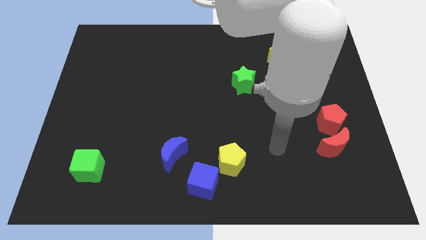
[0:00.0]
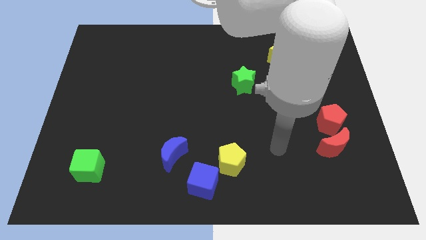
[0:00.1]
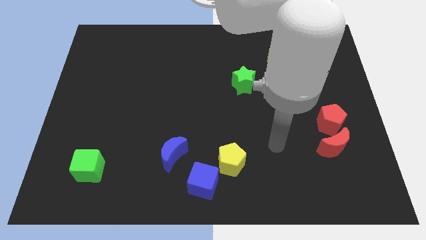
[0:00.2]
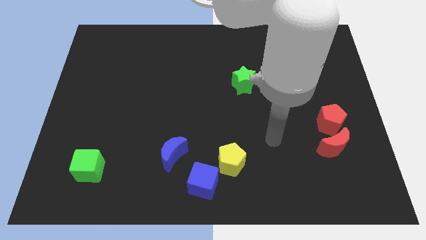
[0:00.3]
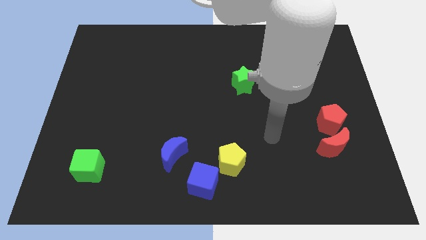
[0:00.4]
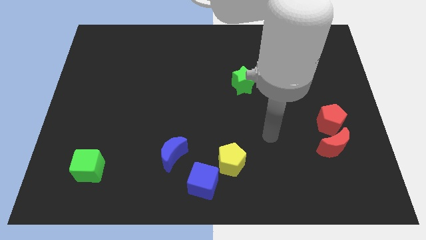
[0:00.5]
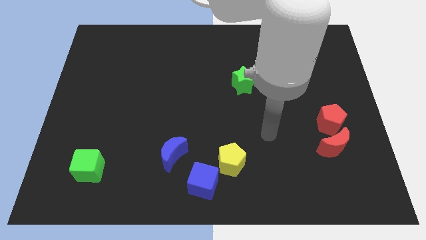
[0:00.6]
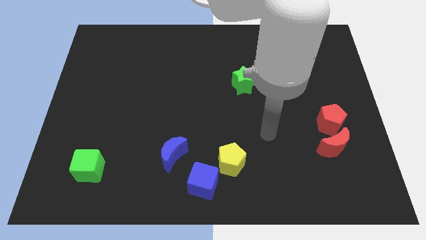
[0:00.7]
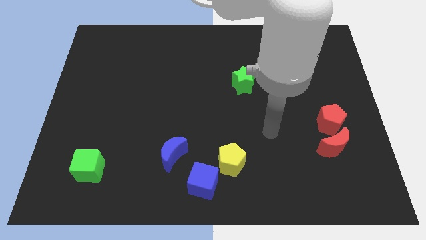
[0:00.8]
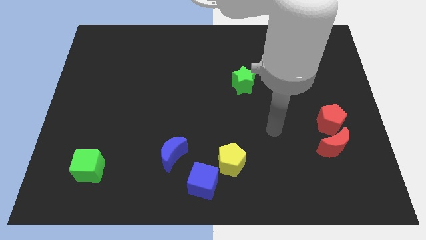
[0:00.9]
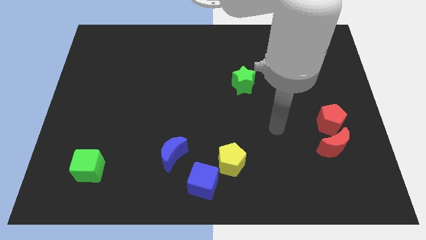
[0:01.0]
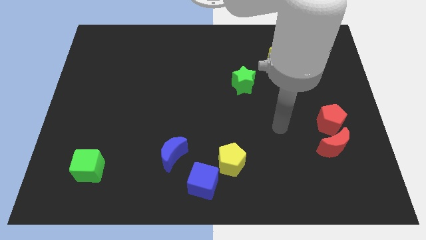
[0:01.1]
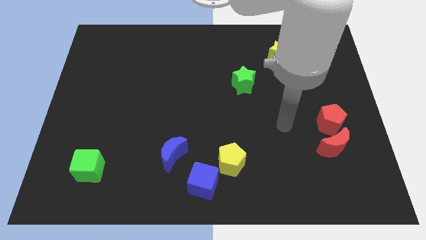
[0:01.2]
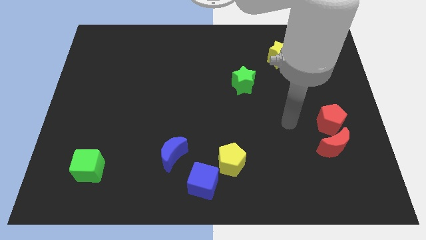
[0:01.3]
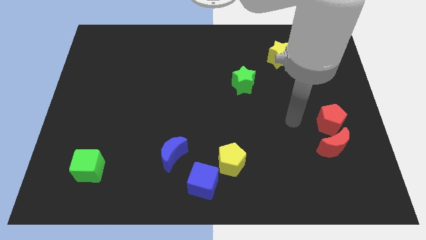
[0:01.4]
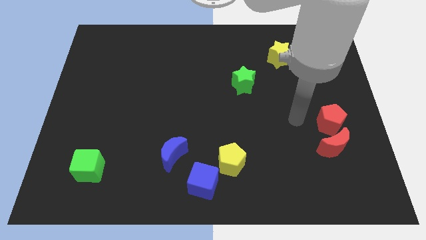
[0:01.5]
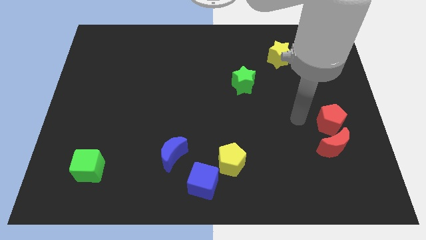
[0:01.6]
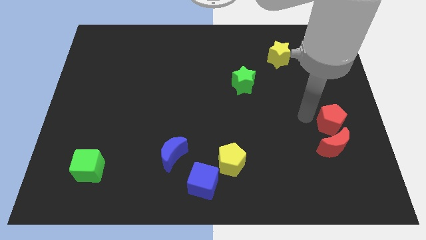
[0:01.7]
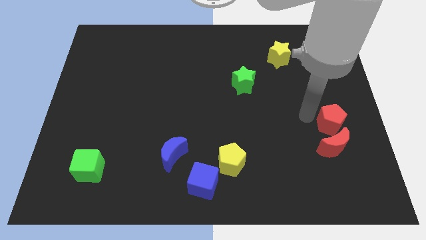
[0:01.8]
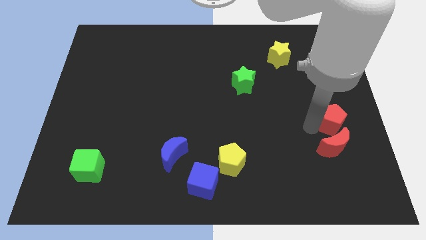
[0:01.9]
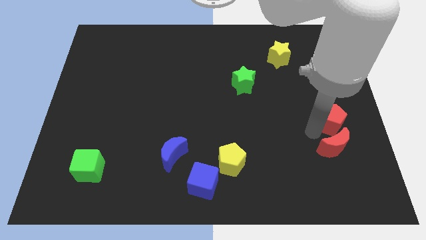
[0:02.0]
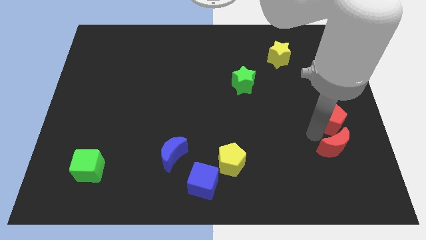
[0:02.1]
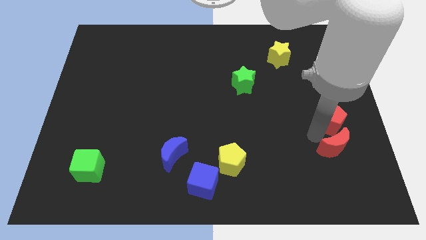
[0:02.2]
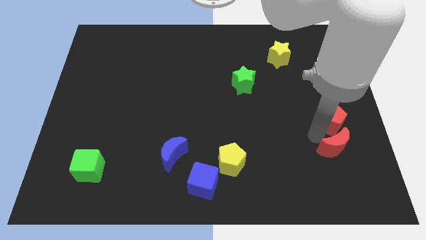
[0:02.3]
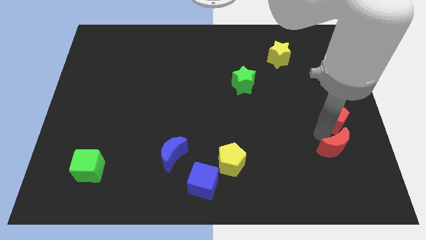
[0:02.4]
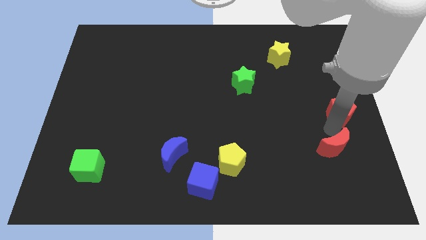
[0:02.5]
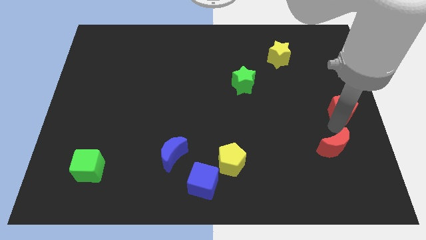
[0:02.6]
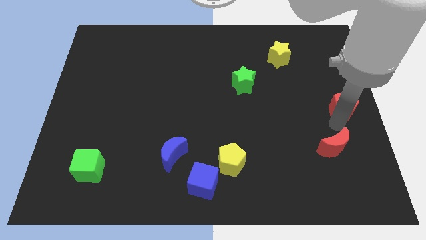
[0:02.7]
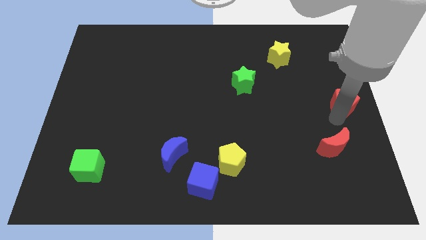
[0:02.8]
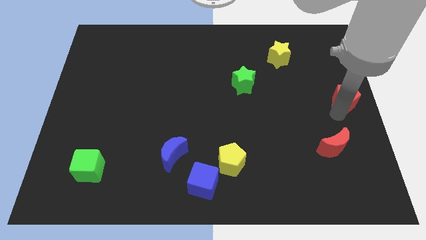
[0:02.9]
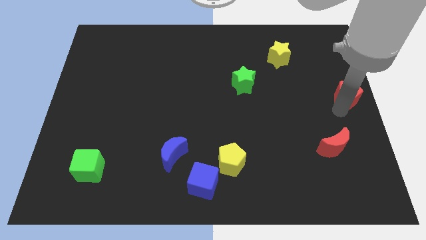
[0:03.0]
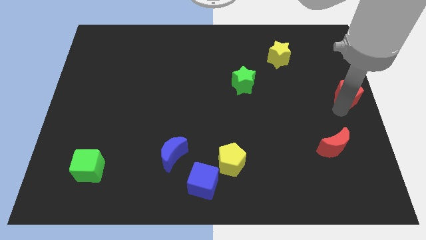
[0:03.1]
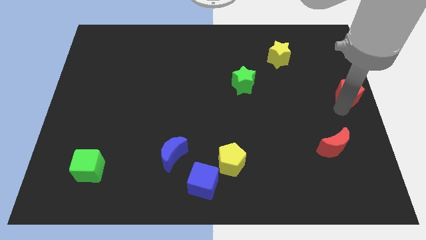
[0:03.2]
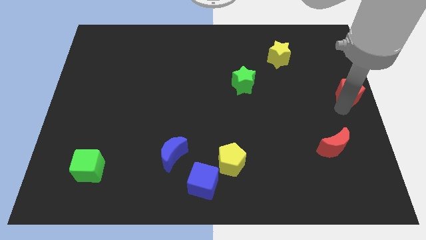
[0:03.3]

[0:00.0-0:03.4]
place the arm to the left of the red pentagon

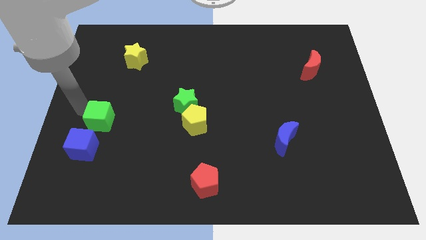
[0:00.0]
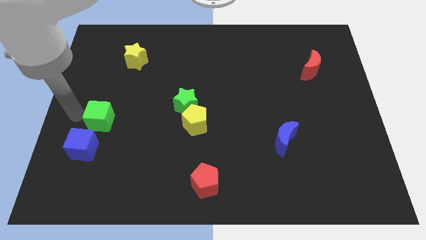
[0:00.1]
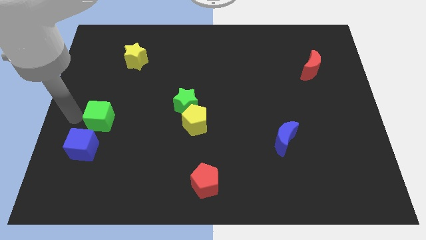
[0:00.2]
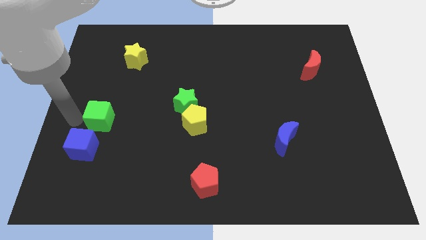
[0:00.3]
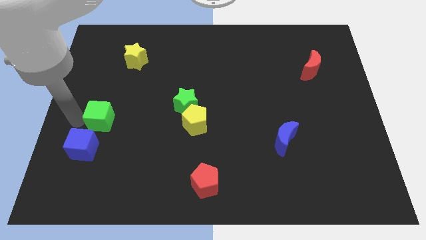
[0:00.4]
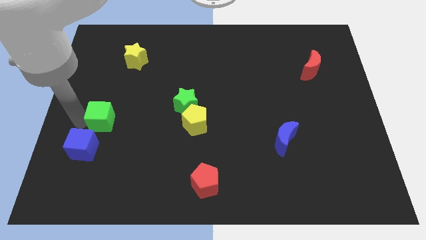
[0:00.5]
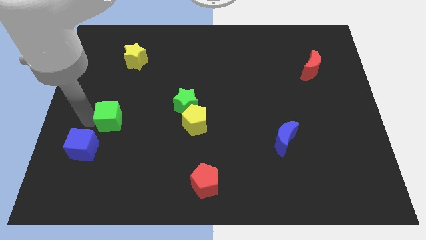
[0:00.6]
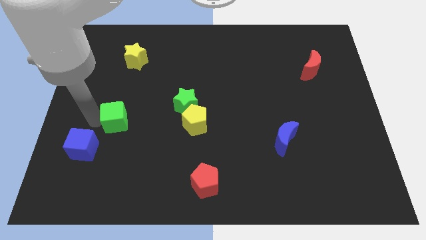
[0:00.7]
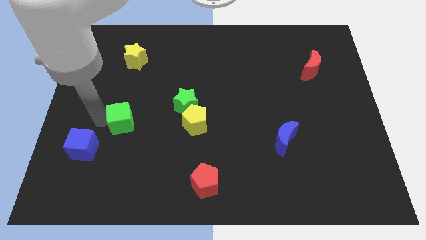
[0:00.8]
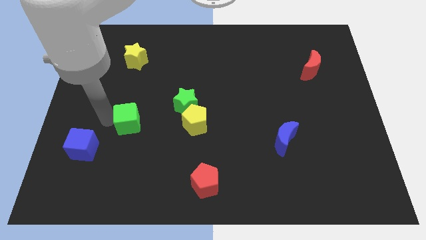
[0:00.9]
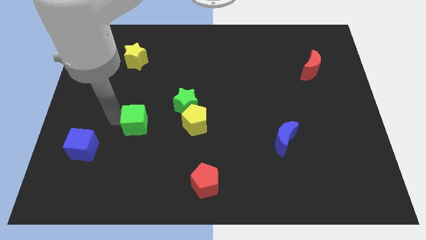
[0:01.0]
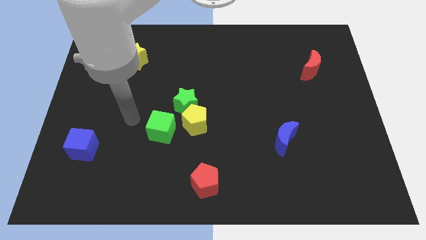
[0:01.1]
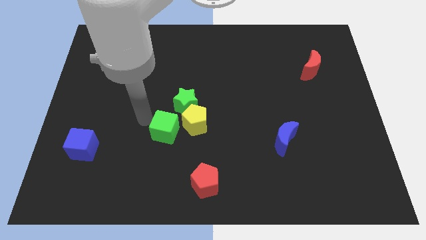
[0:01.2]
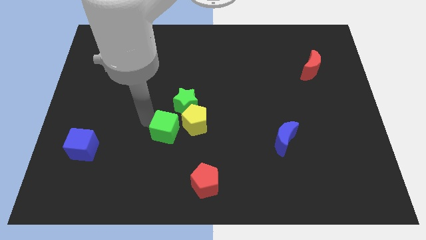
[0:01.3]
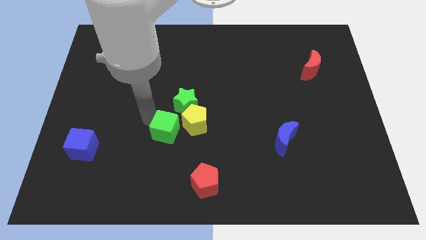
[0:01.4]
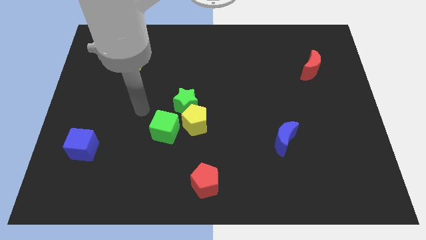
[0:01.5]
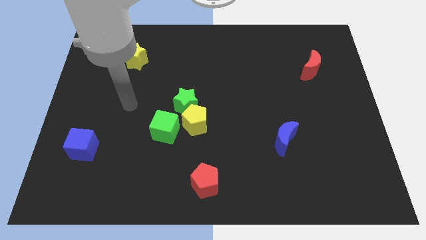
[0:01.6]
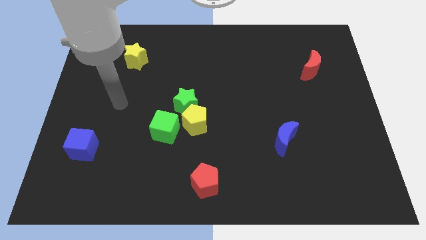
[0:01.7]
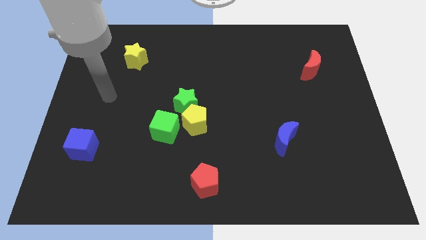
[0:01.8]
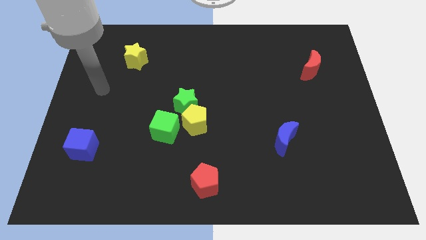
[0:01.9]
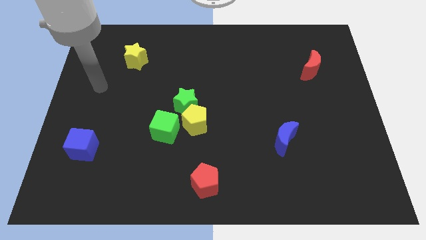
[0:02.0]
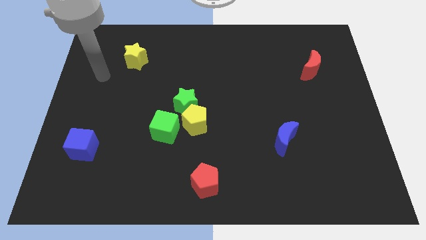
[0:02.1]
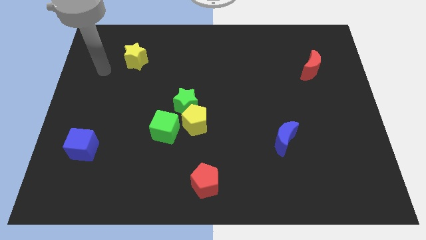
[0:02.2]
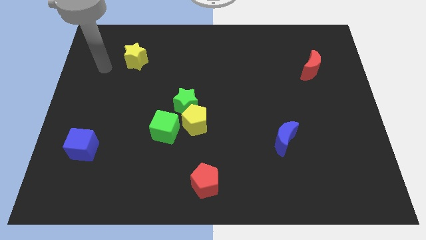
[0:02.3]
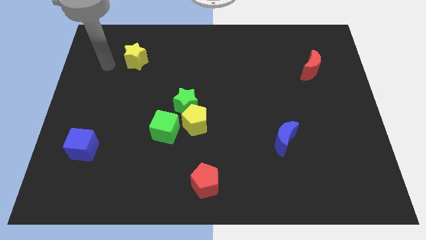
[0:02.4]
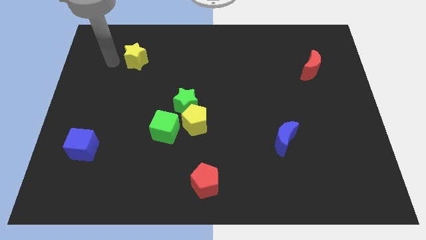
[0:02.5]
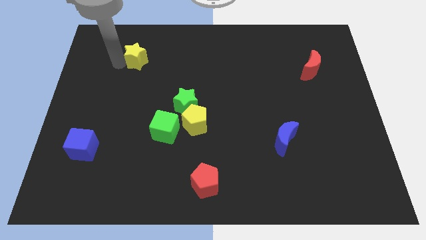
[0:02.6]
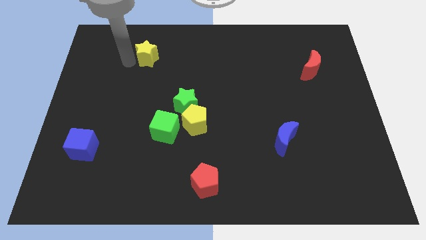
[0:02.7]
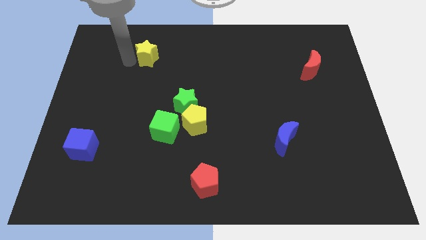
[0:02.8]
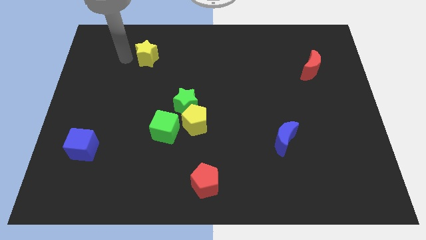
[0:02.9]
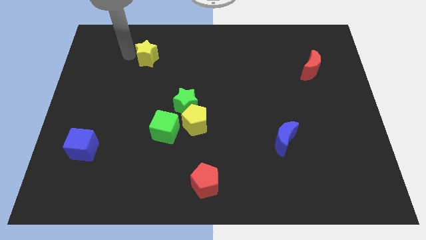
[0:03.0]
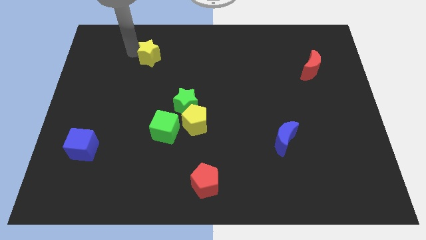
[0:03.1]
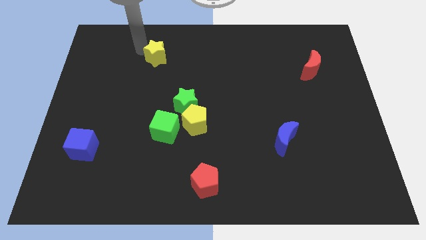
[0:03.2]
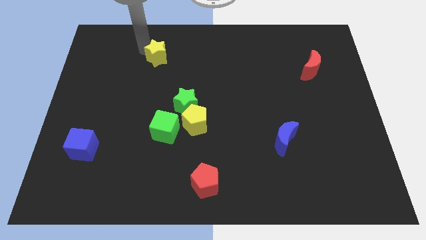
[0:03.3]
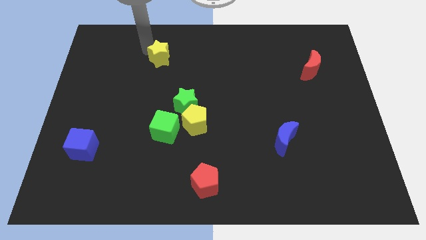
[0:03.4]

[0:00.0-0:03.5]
move the green cube to the left side of the yellow penatgon

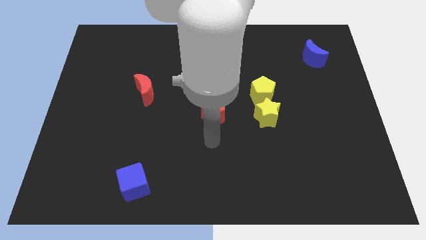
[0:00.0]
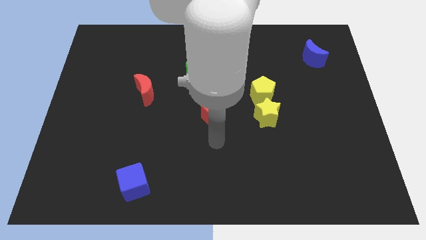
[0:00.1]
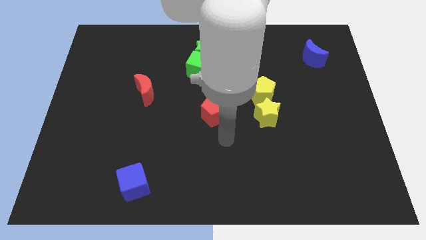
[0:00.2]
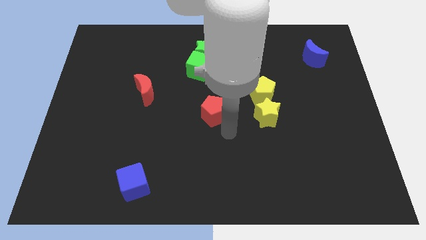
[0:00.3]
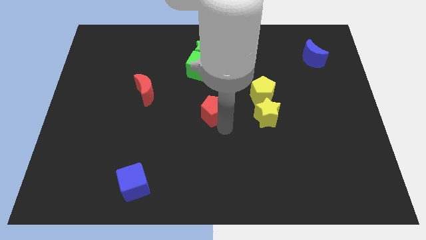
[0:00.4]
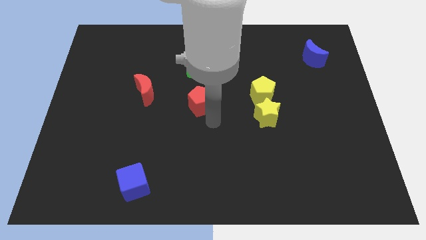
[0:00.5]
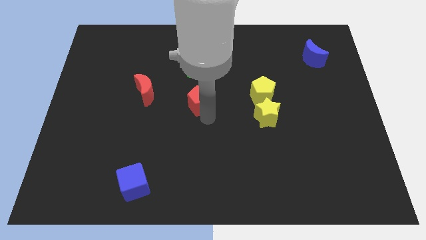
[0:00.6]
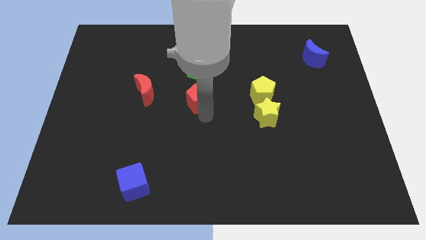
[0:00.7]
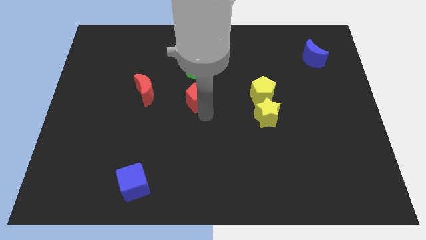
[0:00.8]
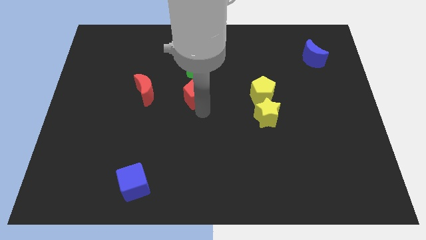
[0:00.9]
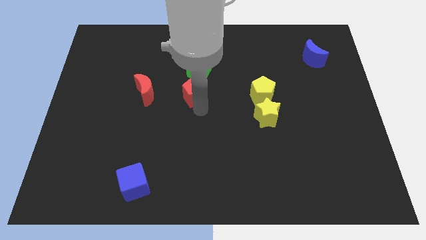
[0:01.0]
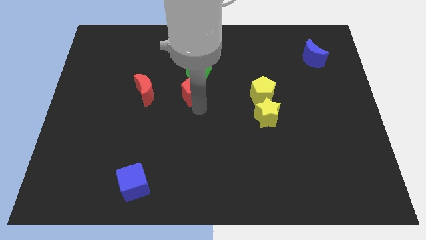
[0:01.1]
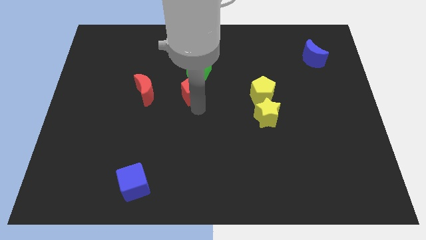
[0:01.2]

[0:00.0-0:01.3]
place the red pentagon below the green cube

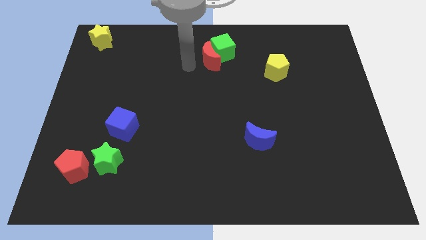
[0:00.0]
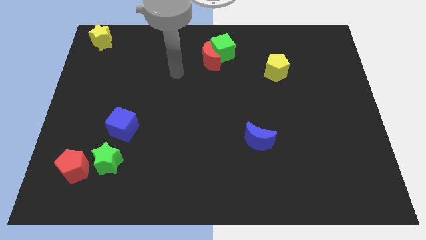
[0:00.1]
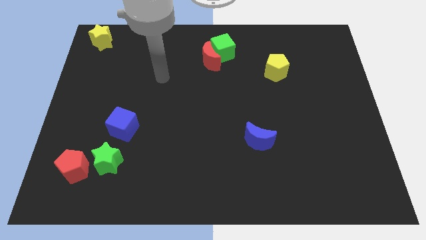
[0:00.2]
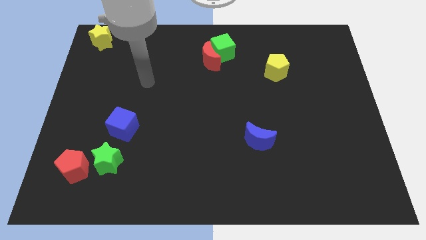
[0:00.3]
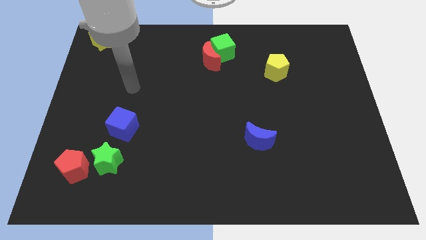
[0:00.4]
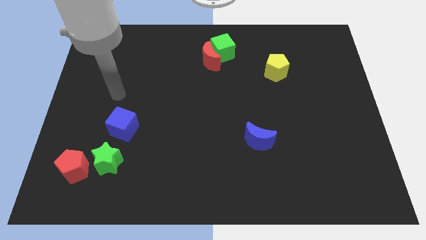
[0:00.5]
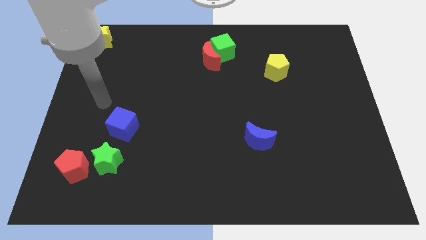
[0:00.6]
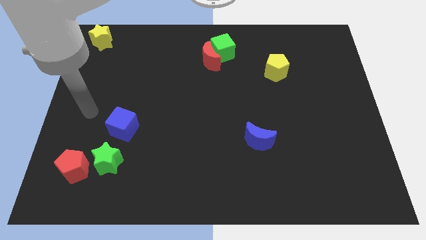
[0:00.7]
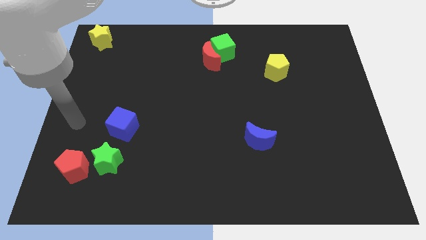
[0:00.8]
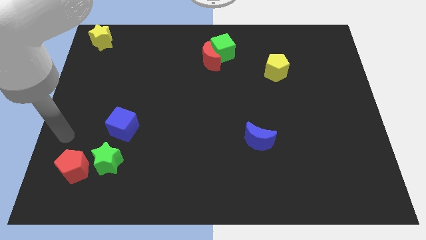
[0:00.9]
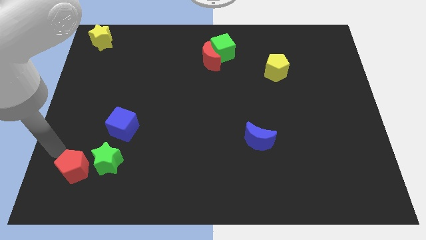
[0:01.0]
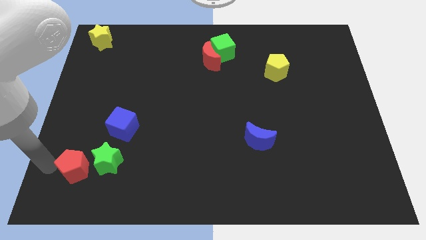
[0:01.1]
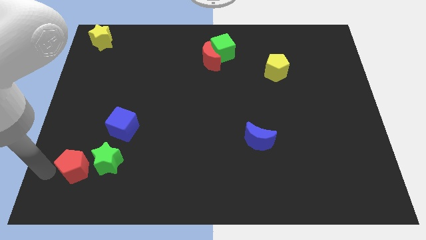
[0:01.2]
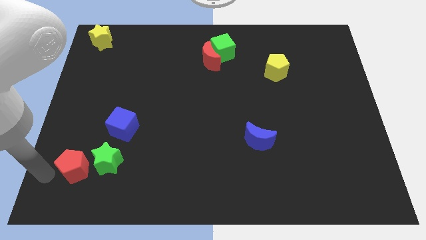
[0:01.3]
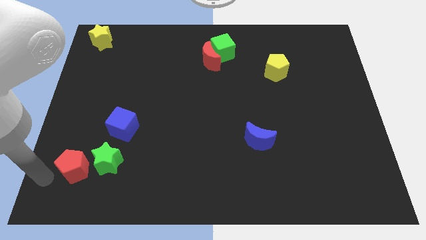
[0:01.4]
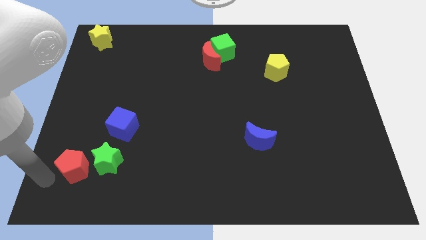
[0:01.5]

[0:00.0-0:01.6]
point your arm diagonal left of red pentagon
